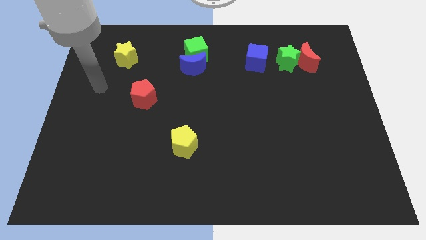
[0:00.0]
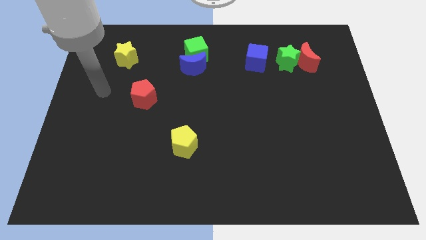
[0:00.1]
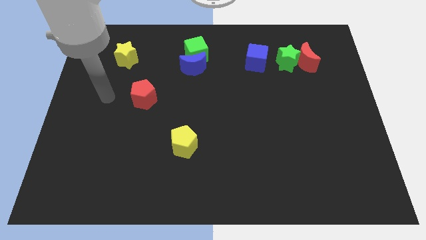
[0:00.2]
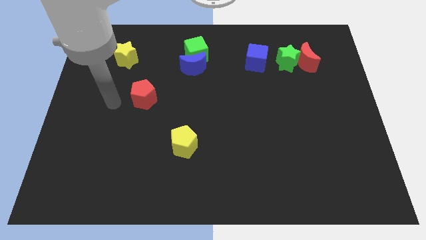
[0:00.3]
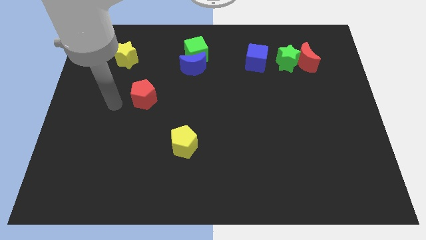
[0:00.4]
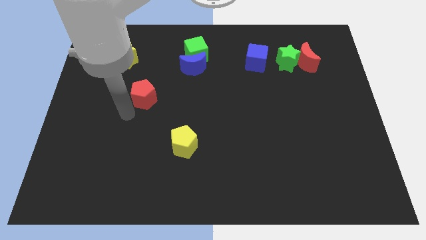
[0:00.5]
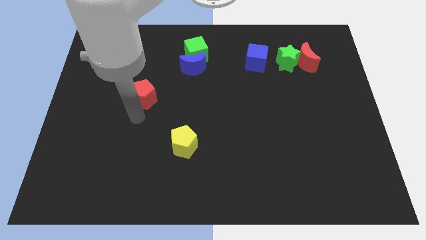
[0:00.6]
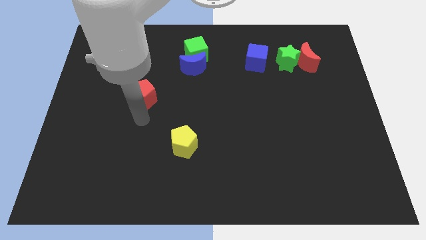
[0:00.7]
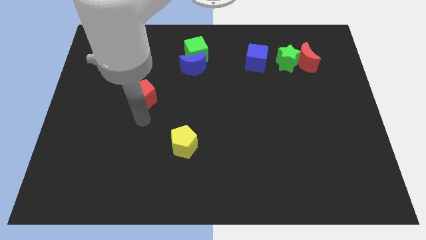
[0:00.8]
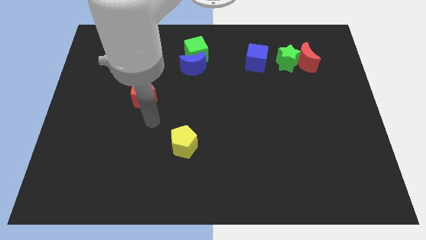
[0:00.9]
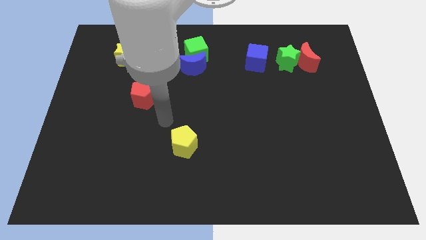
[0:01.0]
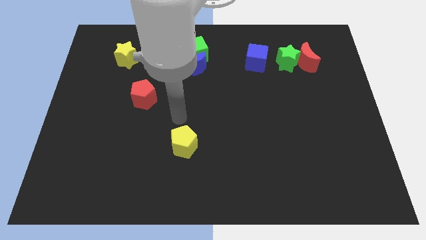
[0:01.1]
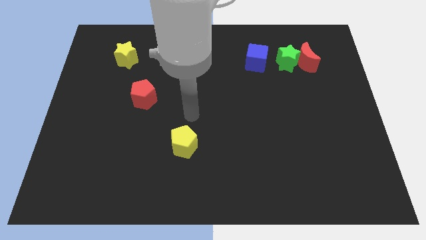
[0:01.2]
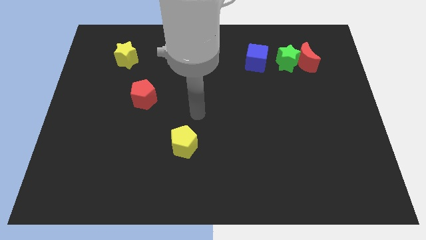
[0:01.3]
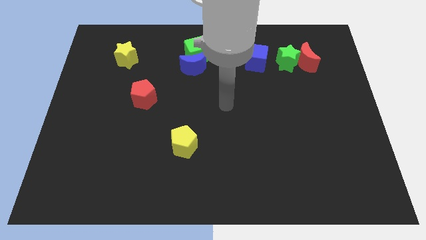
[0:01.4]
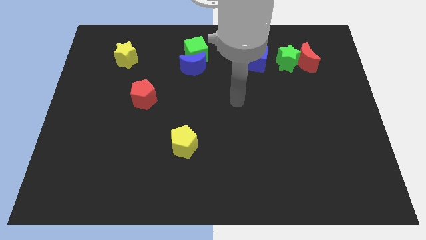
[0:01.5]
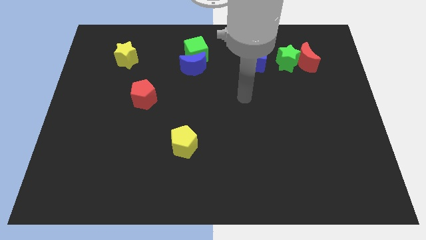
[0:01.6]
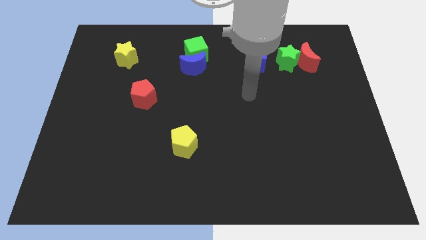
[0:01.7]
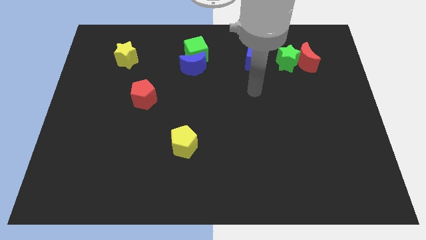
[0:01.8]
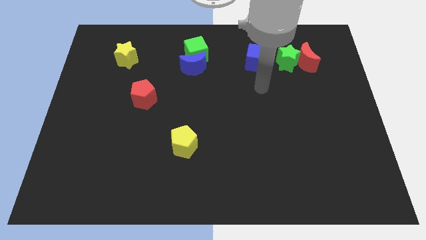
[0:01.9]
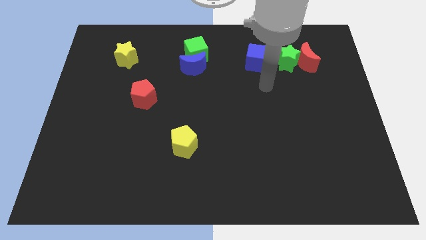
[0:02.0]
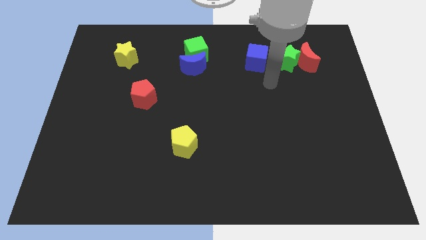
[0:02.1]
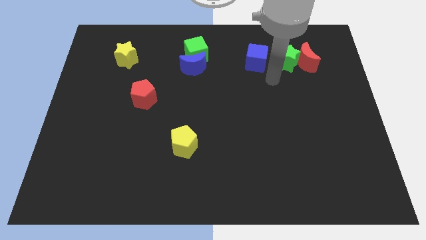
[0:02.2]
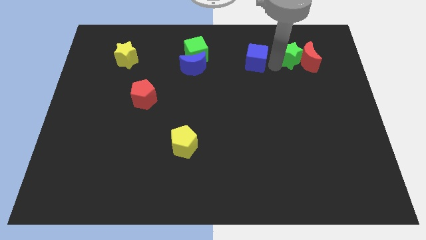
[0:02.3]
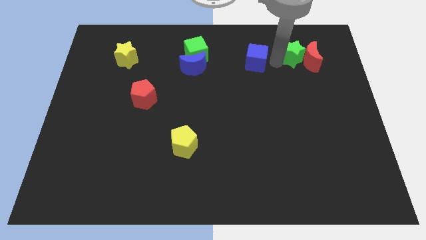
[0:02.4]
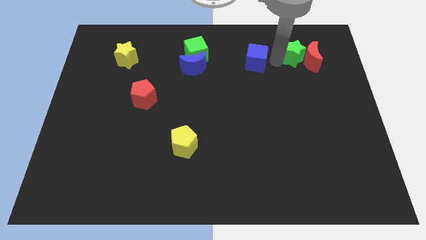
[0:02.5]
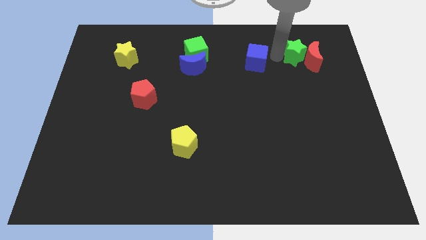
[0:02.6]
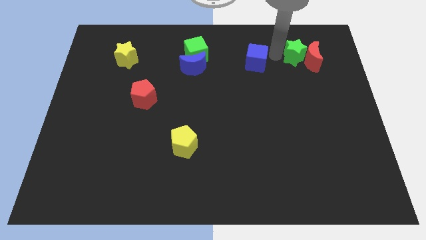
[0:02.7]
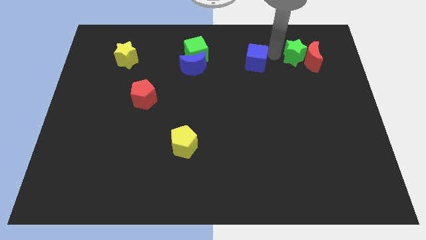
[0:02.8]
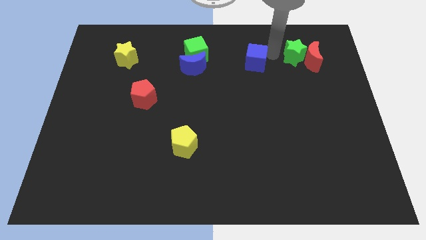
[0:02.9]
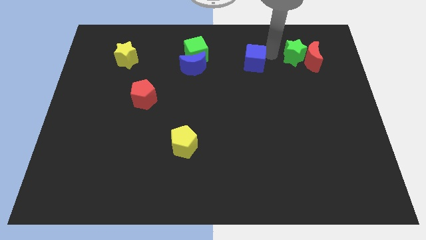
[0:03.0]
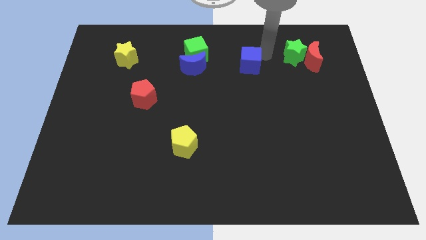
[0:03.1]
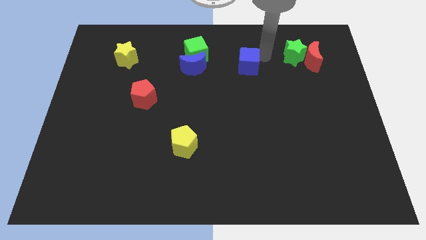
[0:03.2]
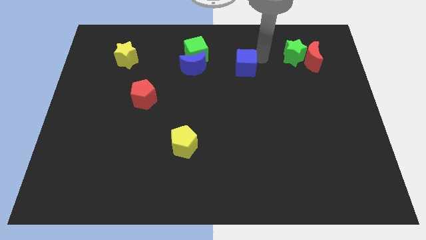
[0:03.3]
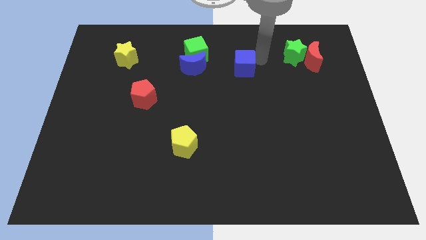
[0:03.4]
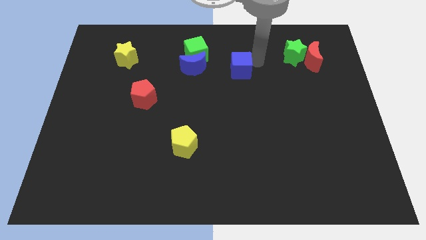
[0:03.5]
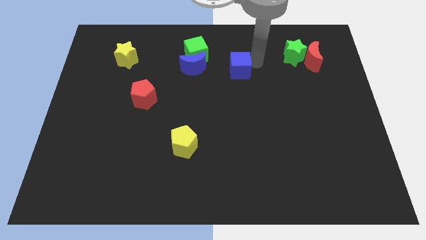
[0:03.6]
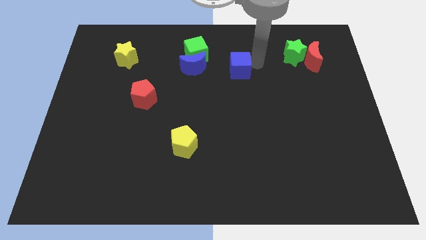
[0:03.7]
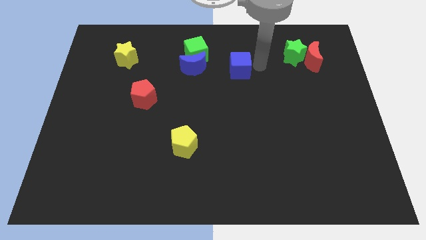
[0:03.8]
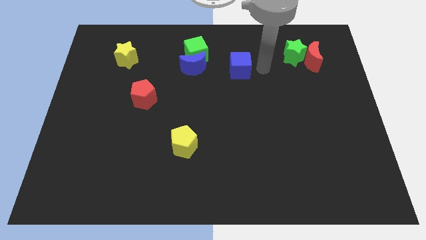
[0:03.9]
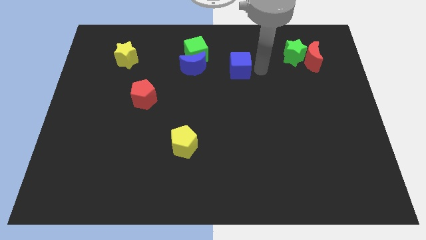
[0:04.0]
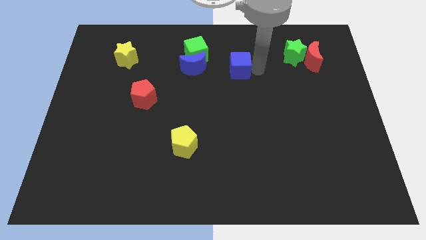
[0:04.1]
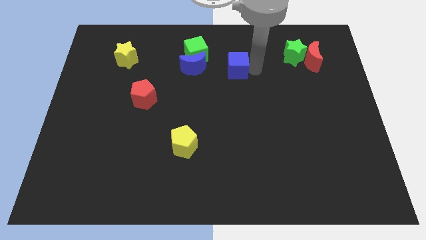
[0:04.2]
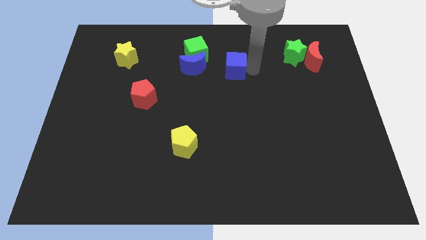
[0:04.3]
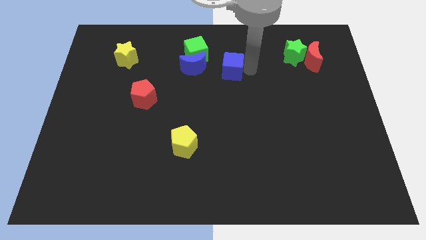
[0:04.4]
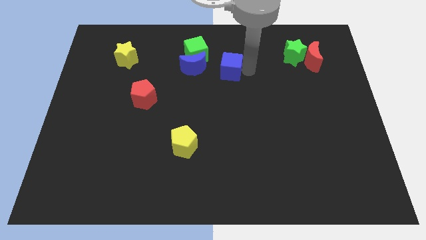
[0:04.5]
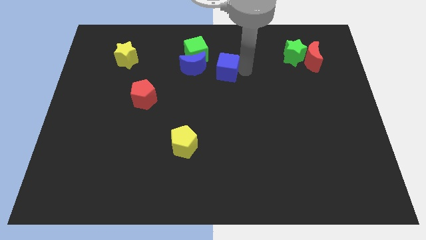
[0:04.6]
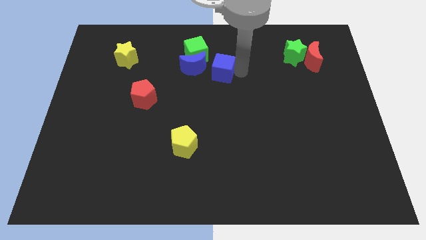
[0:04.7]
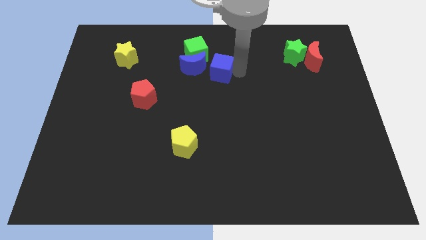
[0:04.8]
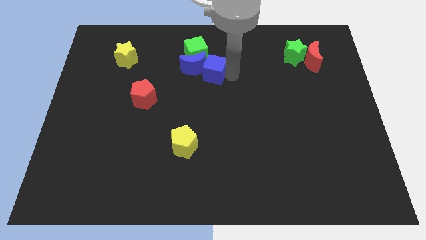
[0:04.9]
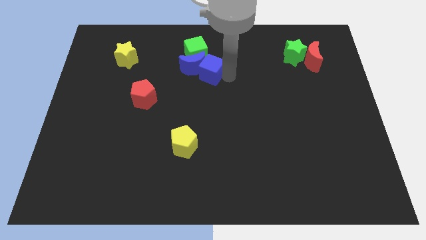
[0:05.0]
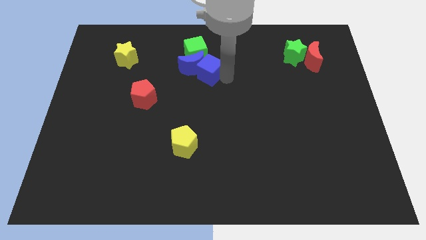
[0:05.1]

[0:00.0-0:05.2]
slide the blue cube next to the blue moon

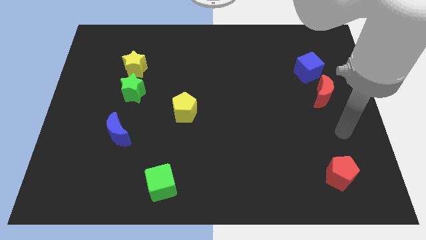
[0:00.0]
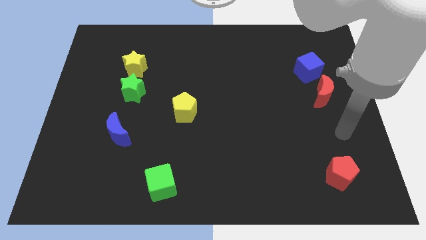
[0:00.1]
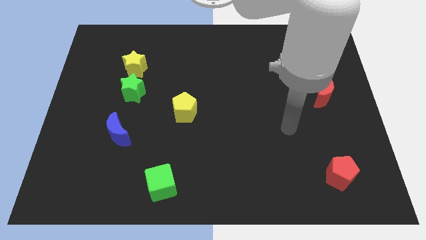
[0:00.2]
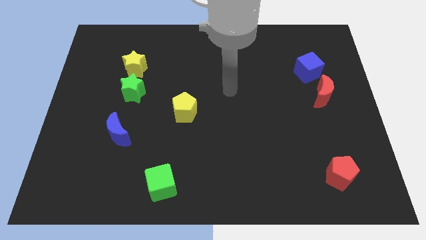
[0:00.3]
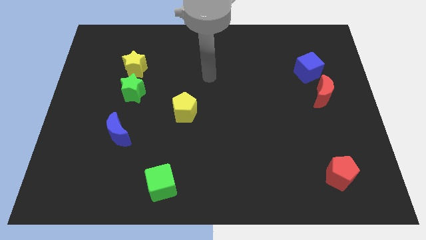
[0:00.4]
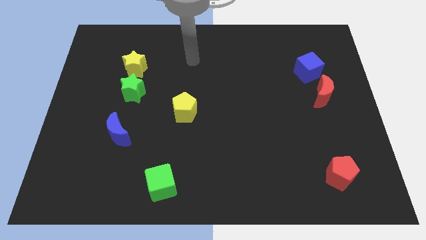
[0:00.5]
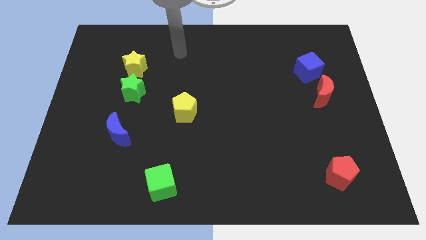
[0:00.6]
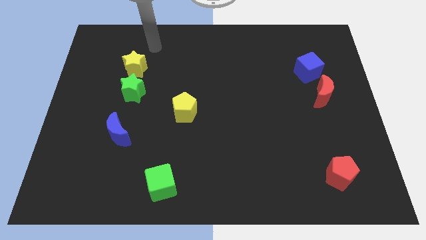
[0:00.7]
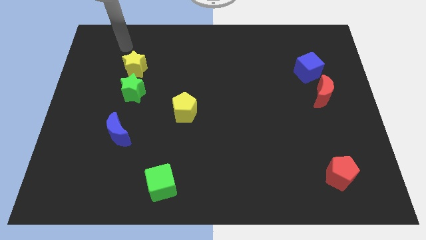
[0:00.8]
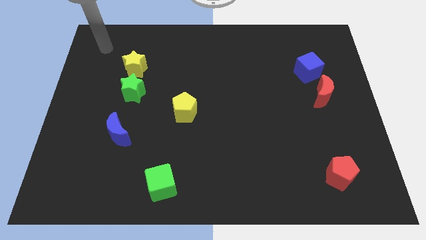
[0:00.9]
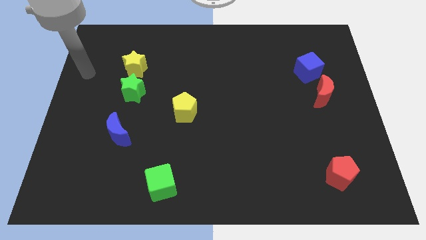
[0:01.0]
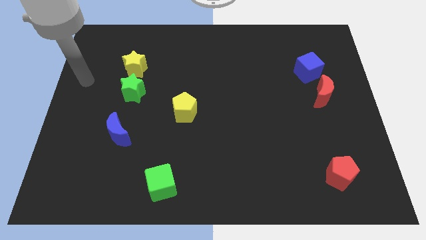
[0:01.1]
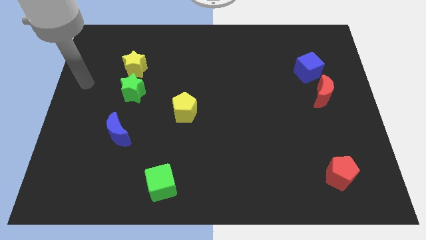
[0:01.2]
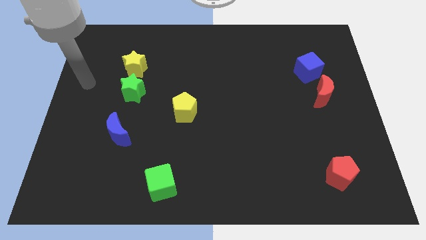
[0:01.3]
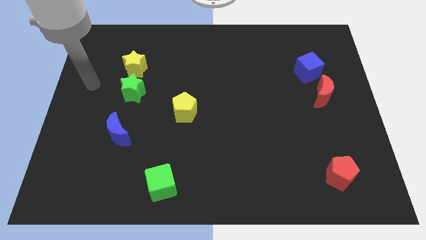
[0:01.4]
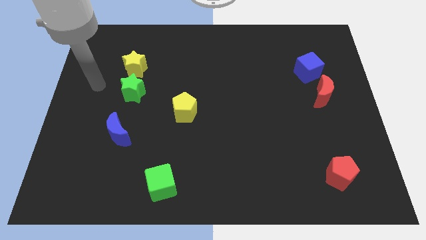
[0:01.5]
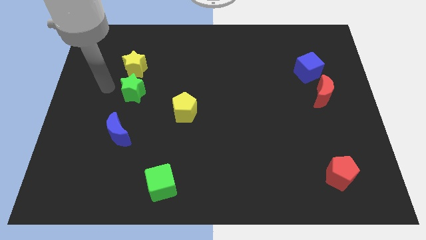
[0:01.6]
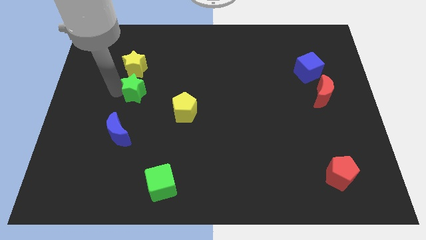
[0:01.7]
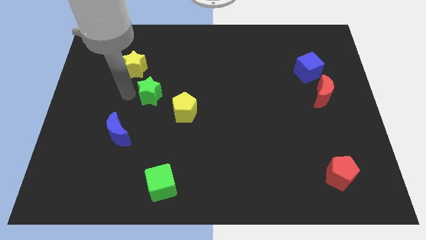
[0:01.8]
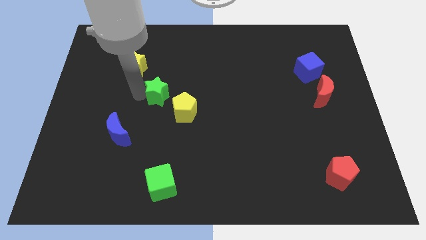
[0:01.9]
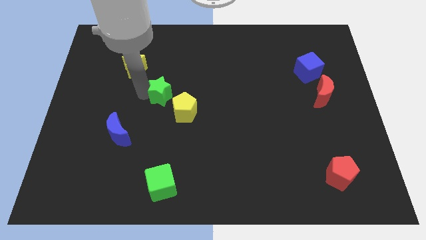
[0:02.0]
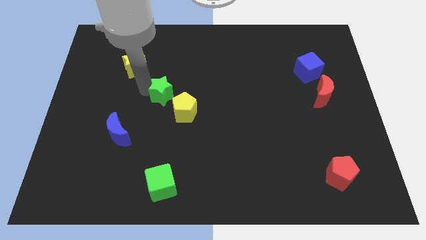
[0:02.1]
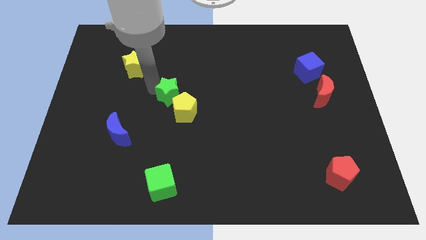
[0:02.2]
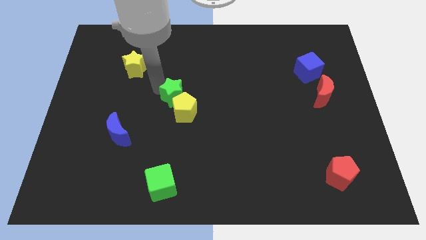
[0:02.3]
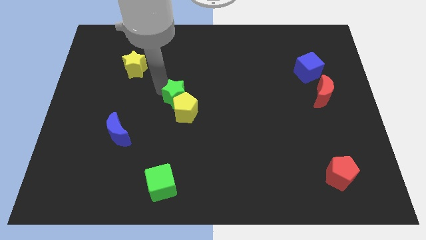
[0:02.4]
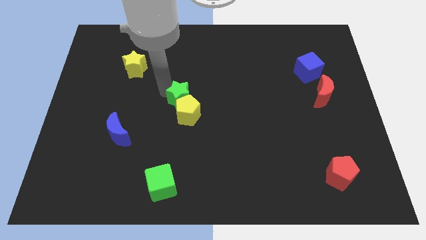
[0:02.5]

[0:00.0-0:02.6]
push the green star towards the yellow pentagon

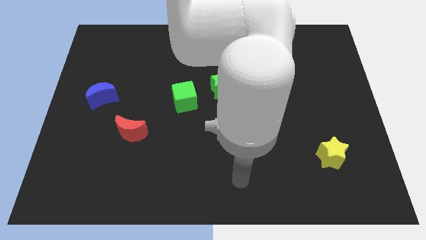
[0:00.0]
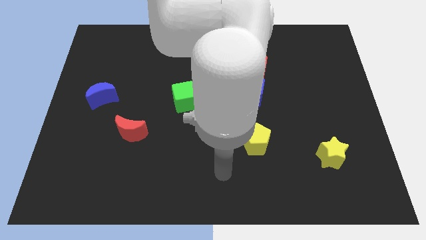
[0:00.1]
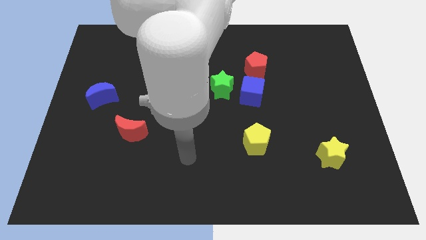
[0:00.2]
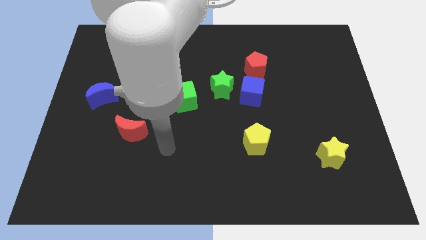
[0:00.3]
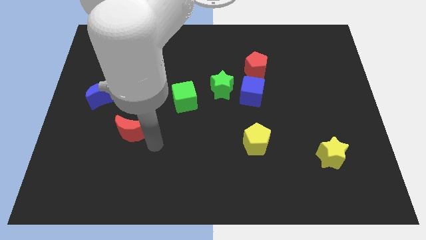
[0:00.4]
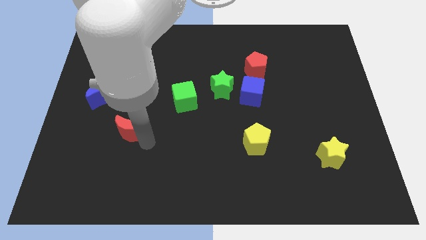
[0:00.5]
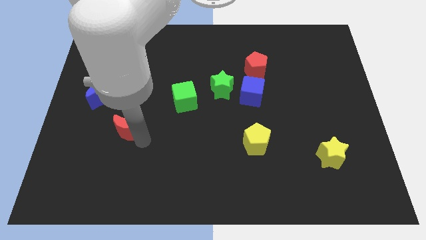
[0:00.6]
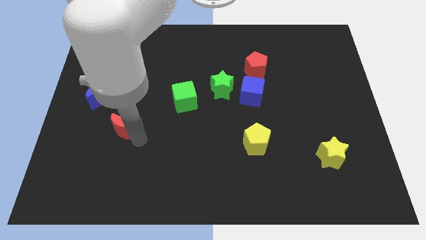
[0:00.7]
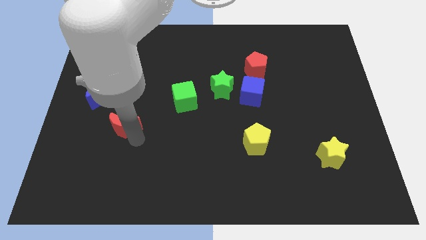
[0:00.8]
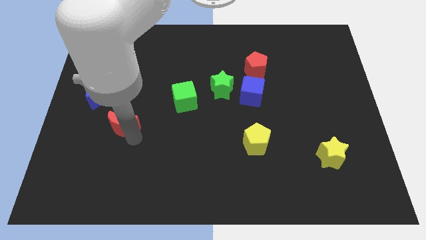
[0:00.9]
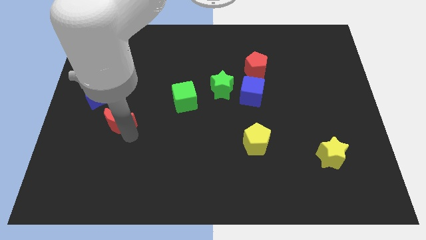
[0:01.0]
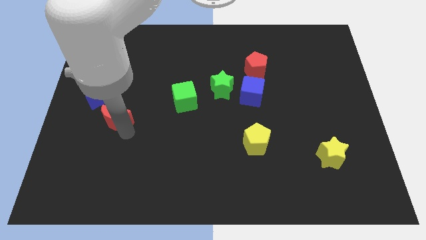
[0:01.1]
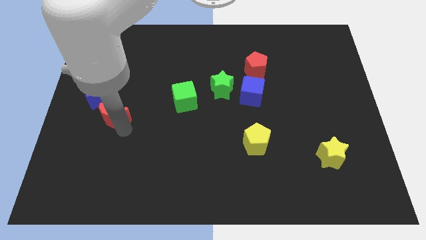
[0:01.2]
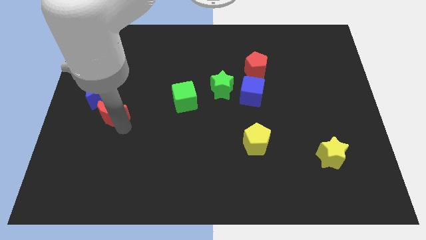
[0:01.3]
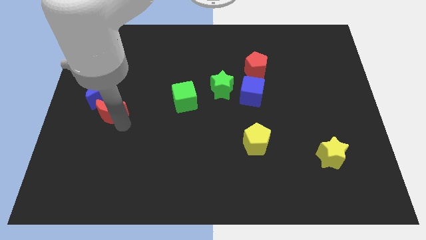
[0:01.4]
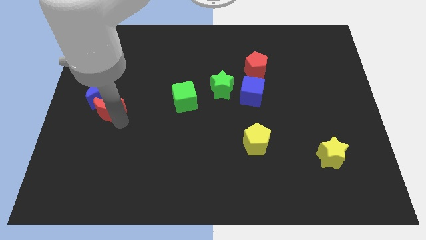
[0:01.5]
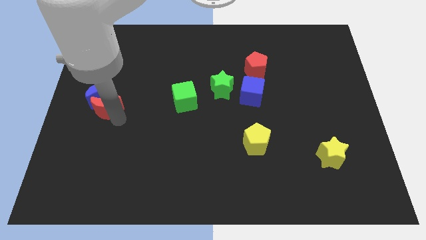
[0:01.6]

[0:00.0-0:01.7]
move the red moon close to the blue moon
